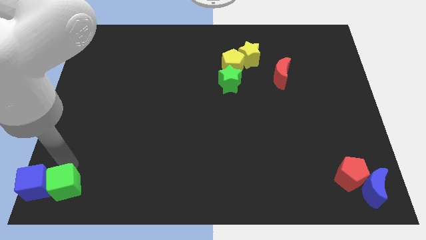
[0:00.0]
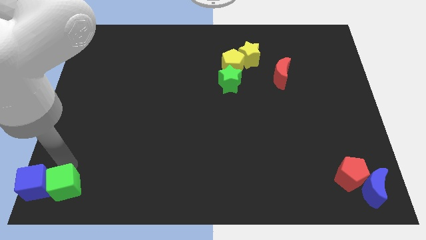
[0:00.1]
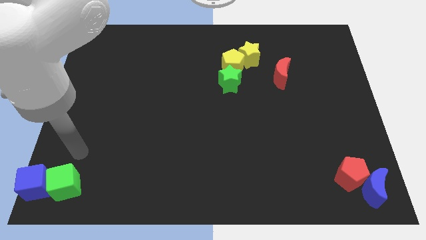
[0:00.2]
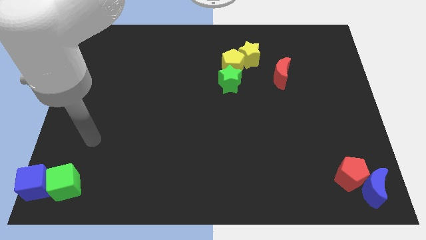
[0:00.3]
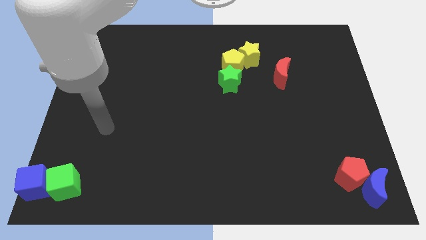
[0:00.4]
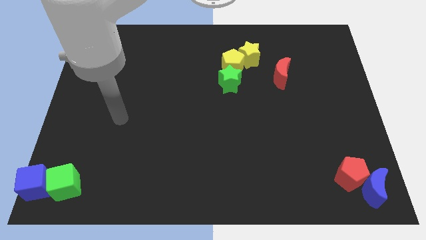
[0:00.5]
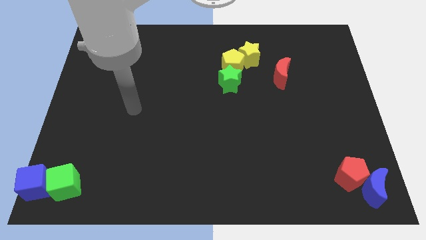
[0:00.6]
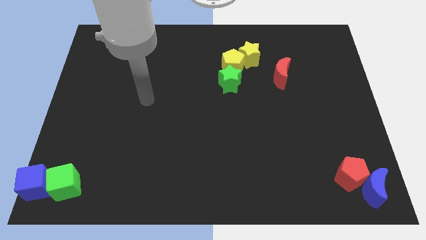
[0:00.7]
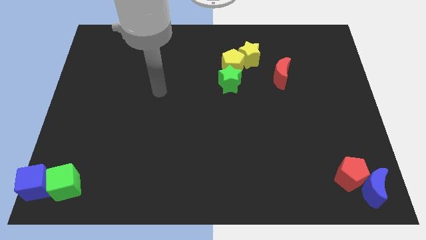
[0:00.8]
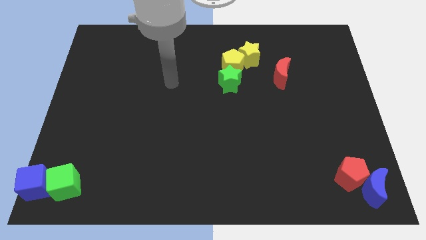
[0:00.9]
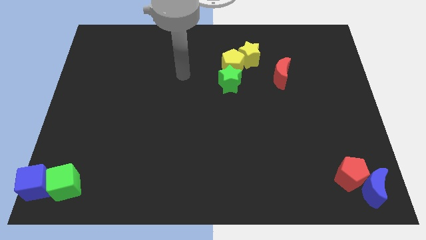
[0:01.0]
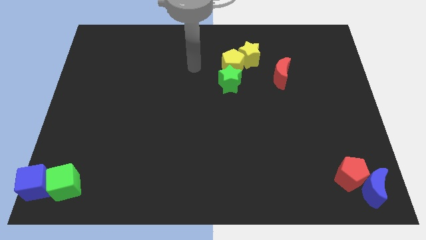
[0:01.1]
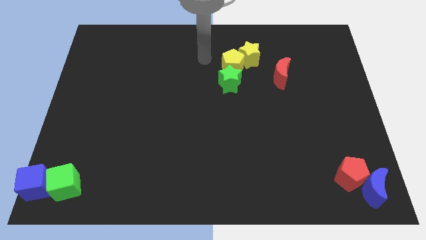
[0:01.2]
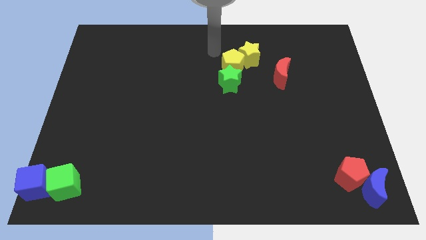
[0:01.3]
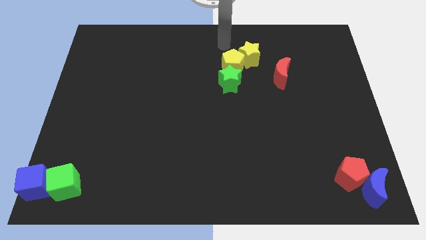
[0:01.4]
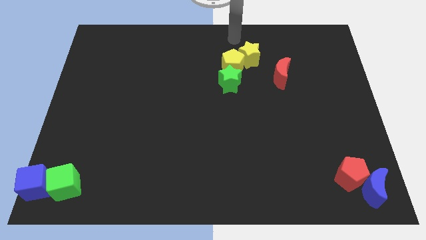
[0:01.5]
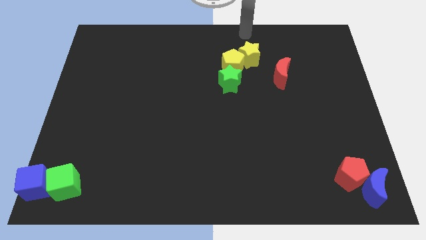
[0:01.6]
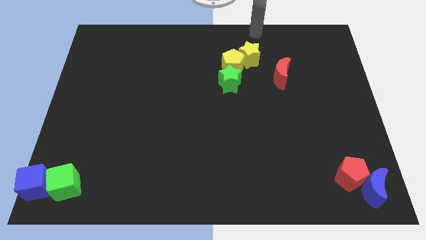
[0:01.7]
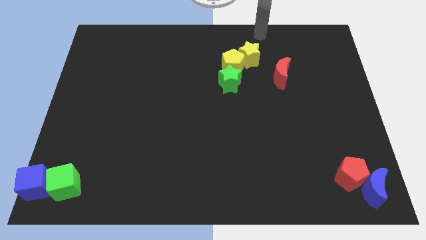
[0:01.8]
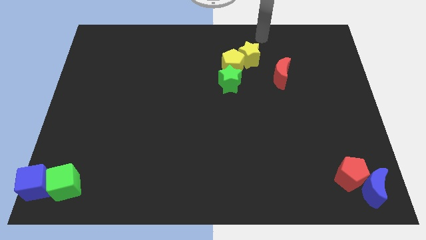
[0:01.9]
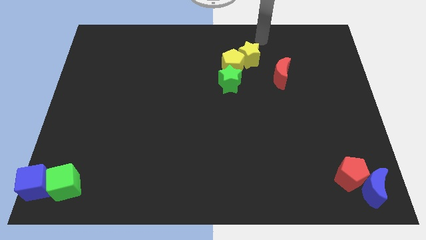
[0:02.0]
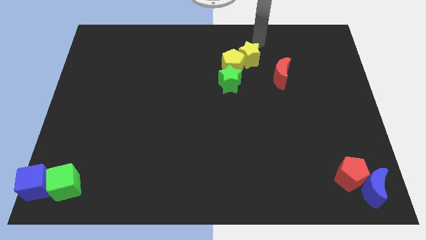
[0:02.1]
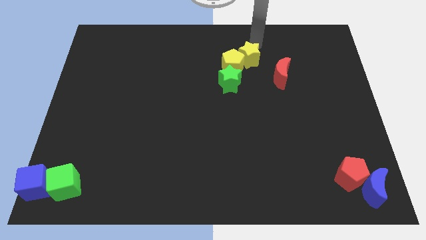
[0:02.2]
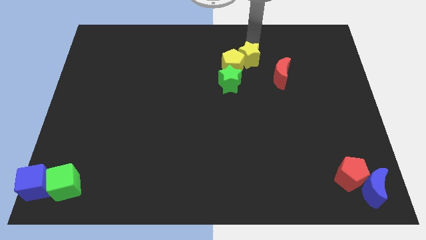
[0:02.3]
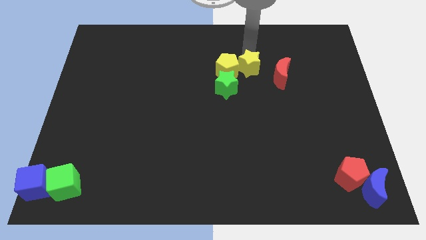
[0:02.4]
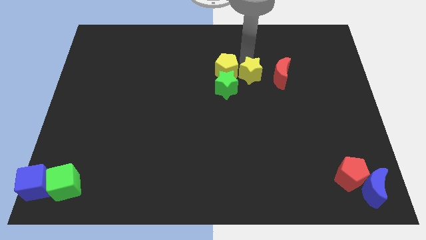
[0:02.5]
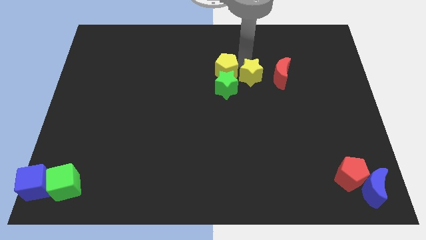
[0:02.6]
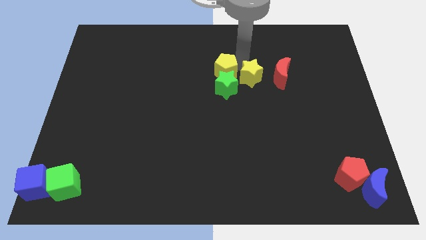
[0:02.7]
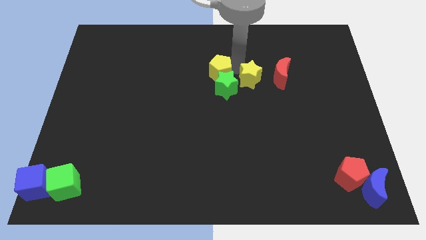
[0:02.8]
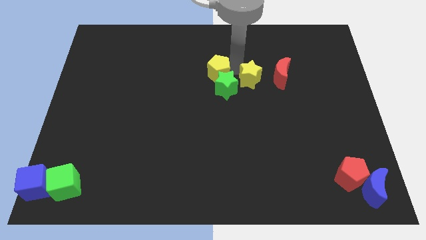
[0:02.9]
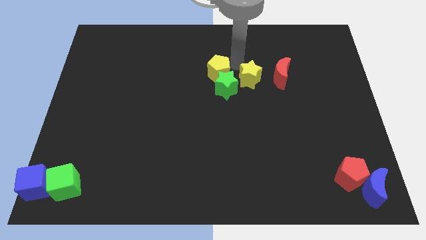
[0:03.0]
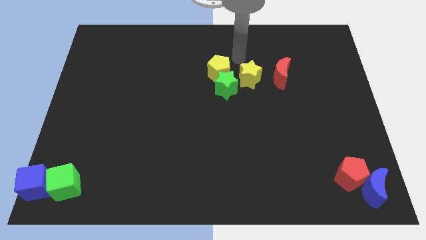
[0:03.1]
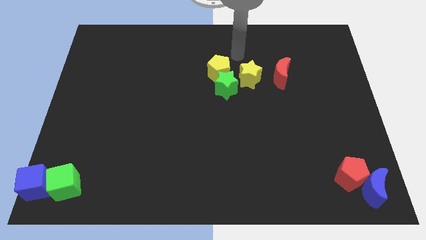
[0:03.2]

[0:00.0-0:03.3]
place yellow star beside red crescent

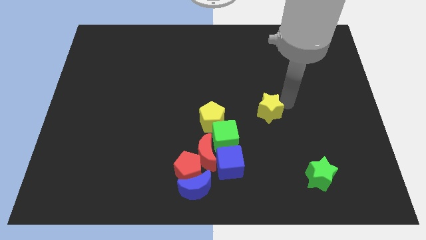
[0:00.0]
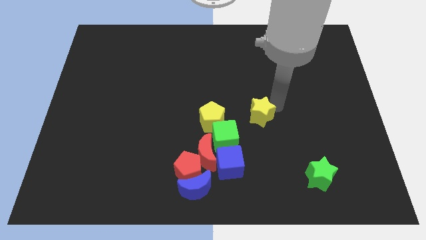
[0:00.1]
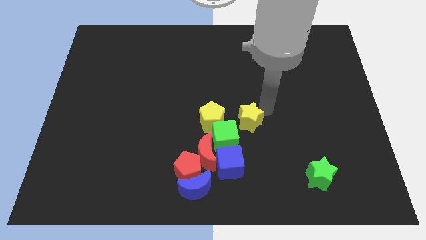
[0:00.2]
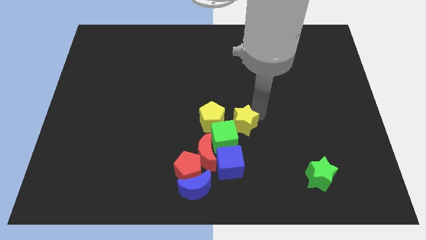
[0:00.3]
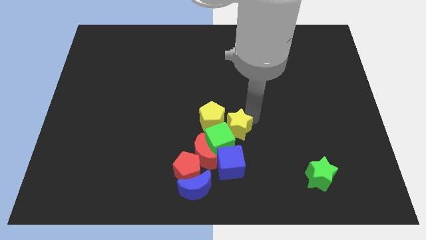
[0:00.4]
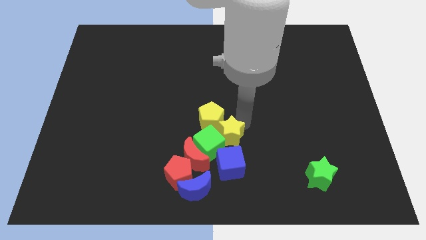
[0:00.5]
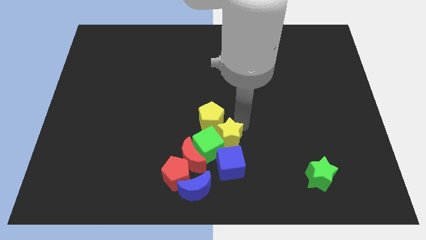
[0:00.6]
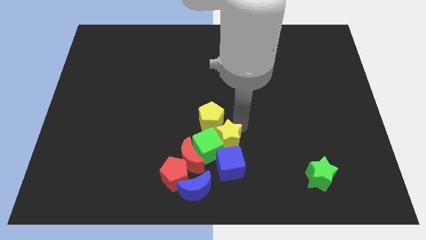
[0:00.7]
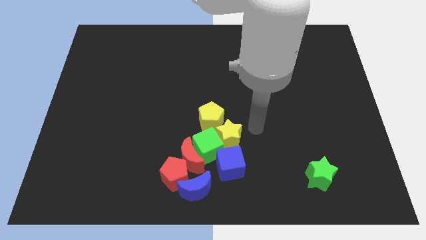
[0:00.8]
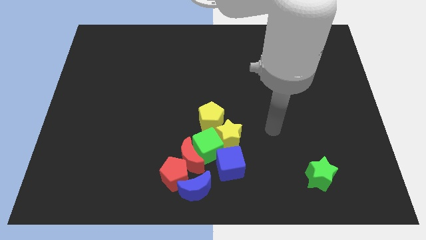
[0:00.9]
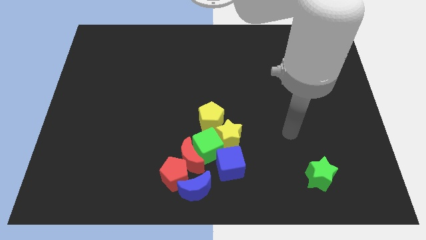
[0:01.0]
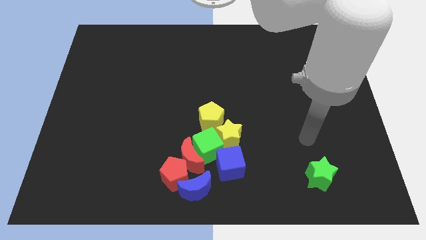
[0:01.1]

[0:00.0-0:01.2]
move yellow star into green cube

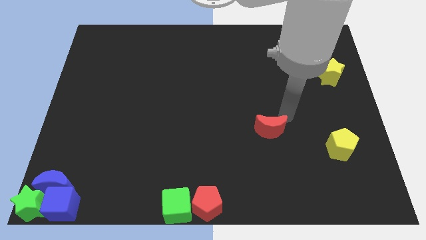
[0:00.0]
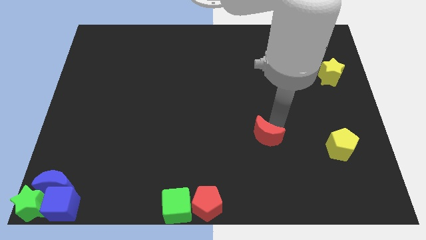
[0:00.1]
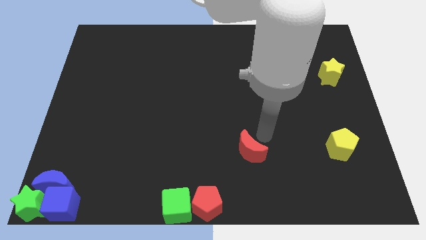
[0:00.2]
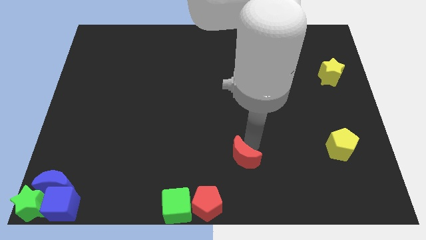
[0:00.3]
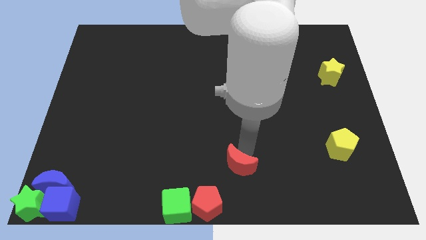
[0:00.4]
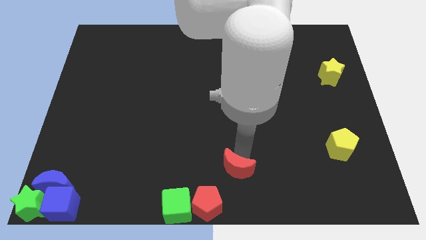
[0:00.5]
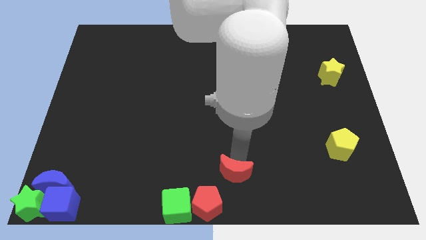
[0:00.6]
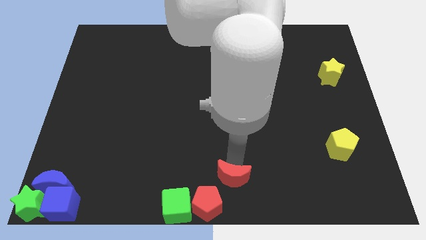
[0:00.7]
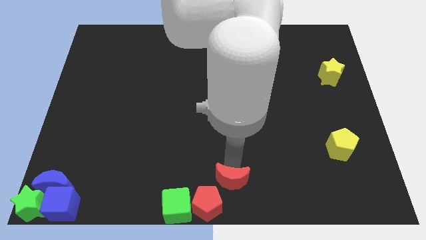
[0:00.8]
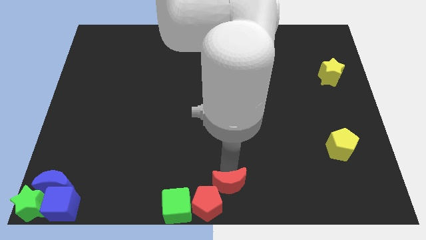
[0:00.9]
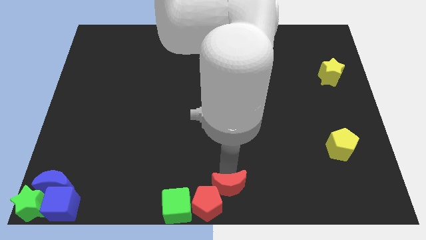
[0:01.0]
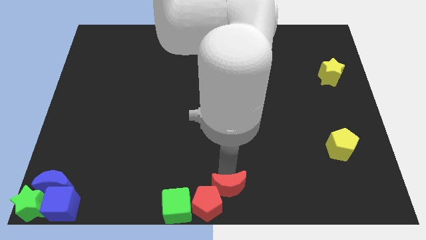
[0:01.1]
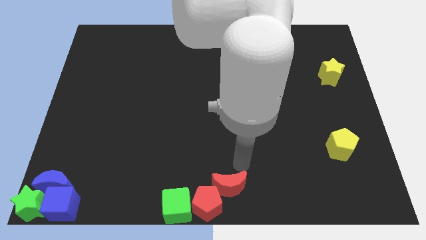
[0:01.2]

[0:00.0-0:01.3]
place the red crescent above the red pentagon

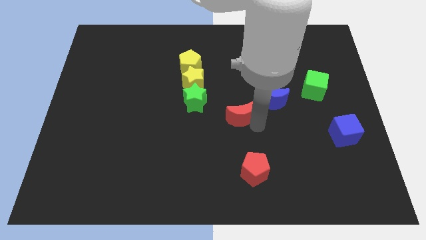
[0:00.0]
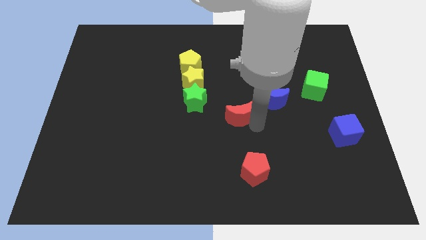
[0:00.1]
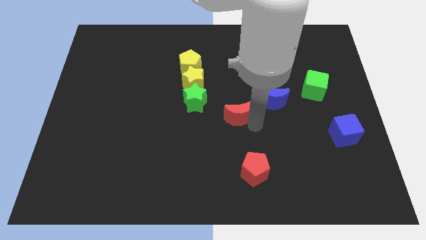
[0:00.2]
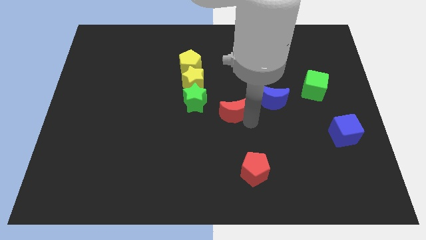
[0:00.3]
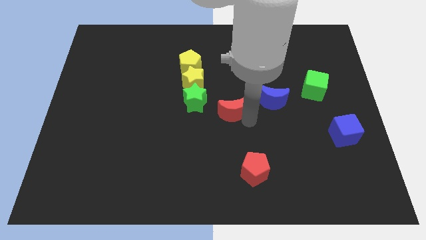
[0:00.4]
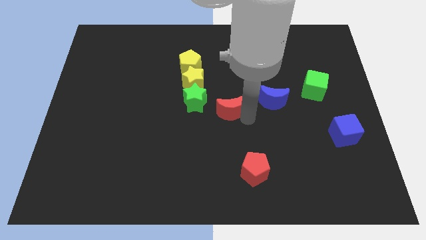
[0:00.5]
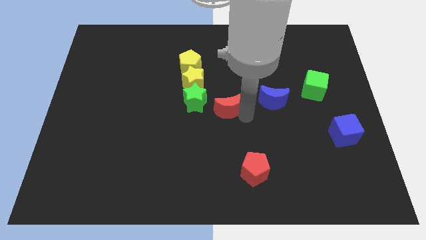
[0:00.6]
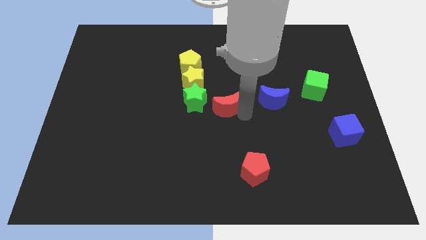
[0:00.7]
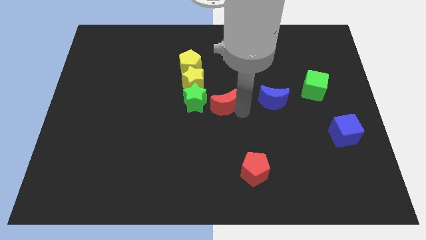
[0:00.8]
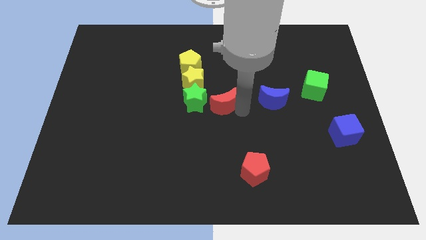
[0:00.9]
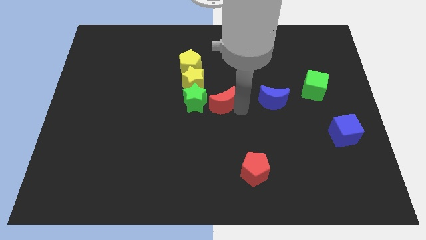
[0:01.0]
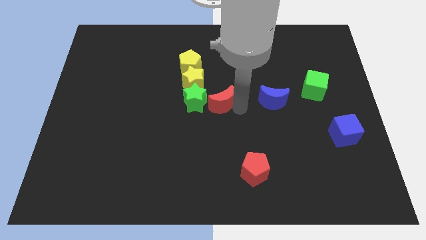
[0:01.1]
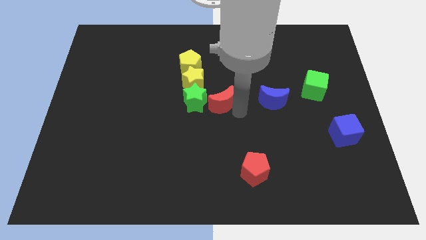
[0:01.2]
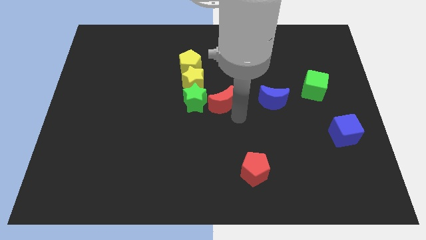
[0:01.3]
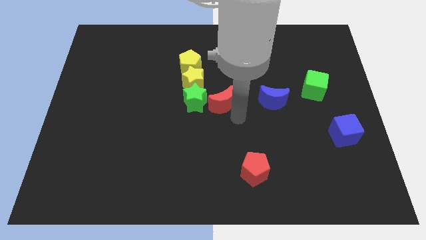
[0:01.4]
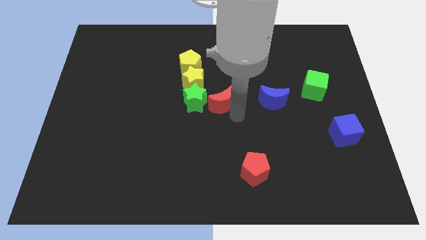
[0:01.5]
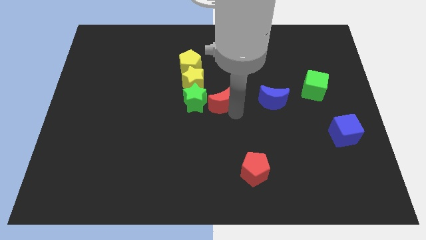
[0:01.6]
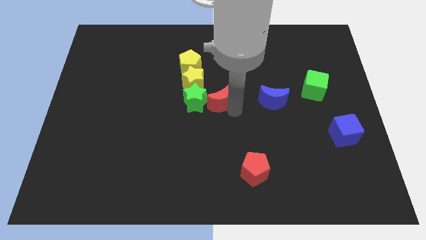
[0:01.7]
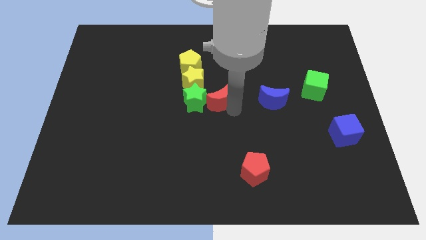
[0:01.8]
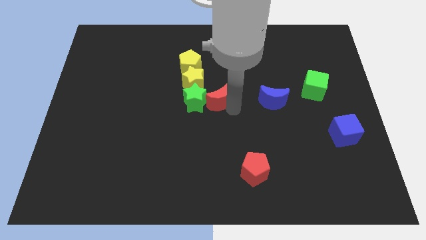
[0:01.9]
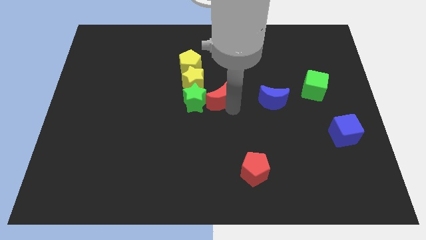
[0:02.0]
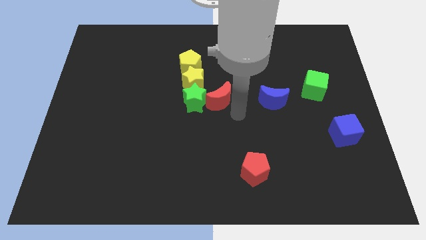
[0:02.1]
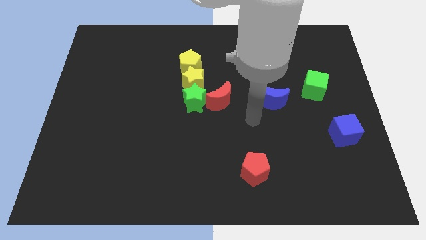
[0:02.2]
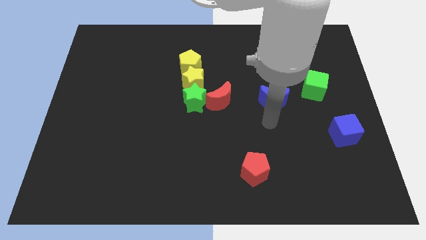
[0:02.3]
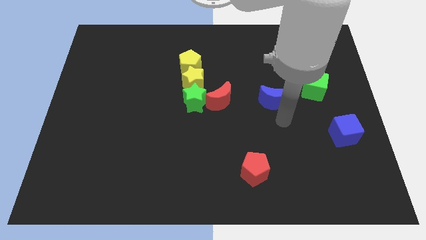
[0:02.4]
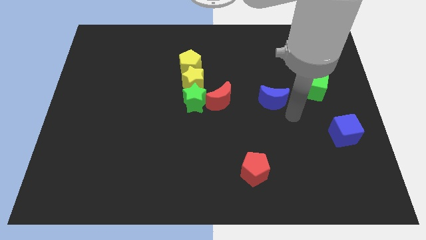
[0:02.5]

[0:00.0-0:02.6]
put the red moon to the right side of green star

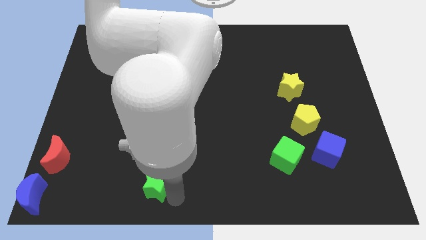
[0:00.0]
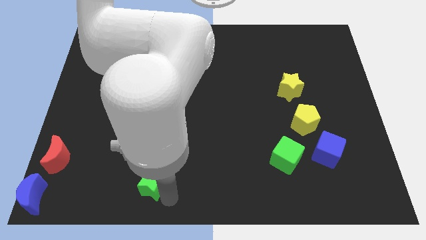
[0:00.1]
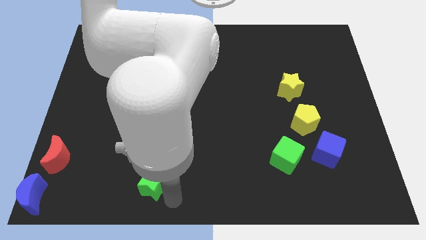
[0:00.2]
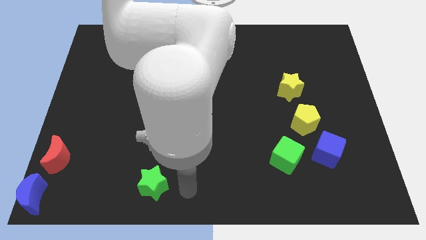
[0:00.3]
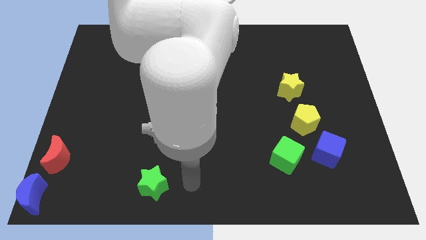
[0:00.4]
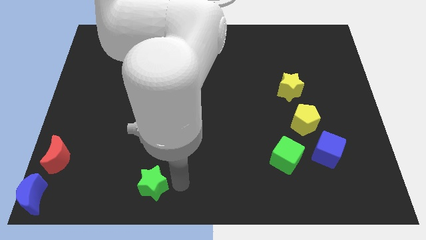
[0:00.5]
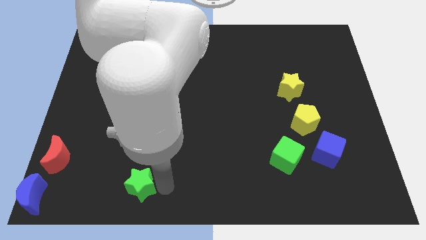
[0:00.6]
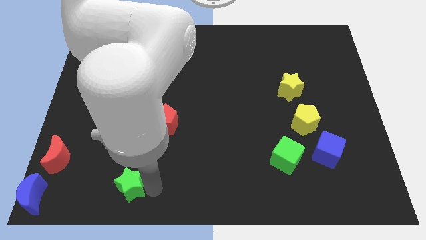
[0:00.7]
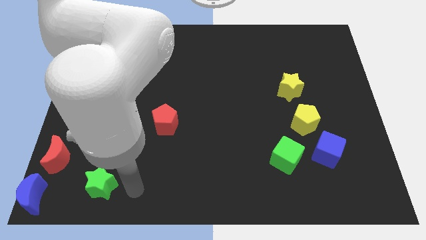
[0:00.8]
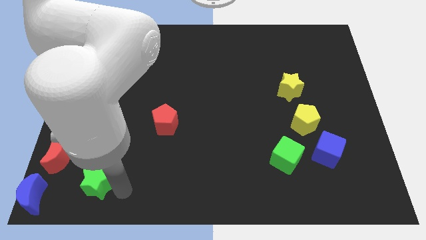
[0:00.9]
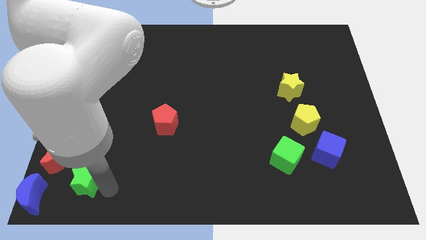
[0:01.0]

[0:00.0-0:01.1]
move green star towards red moon
